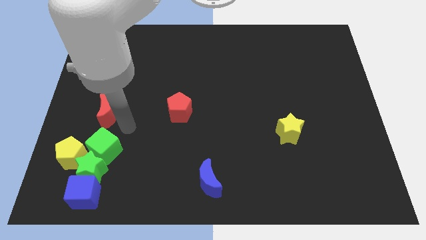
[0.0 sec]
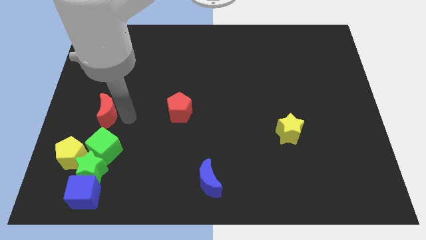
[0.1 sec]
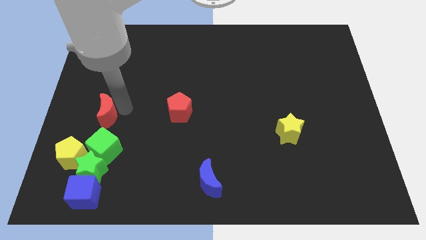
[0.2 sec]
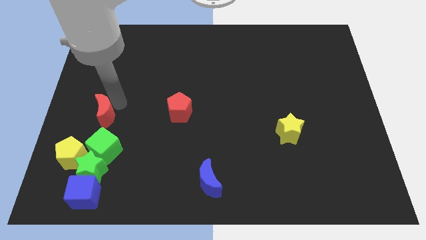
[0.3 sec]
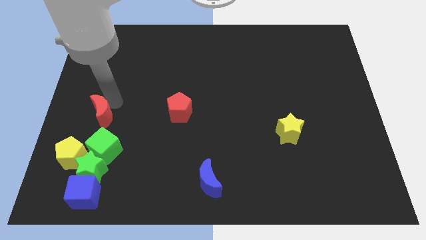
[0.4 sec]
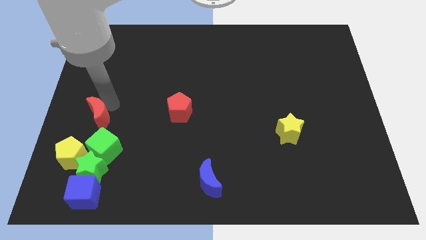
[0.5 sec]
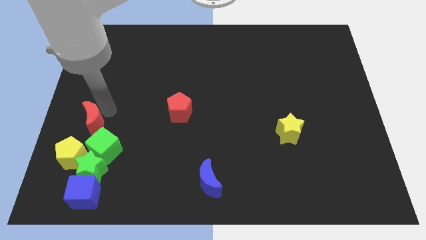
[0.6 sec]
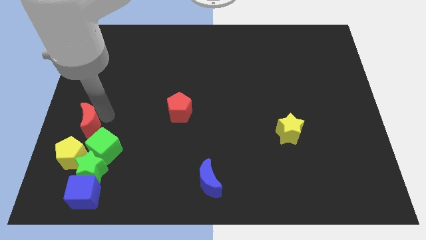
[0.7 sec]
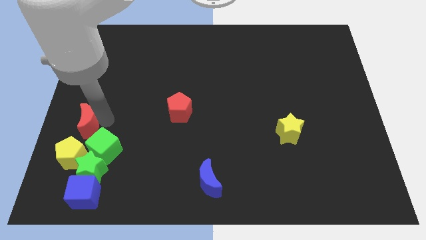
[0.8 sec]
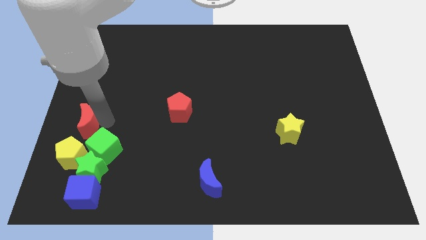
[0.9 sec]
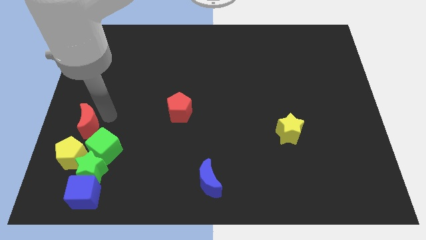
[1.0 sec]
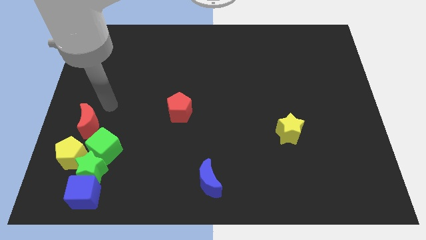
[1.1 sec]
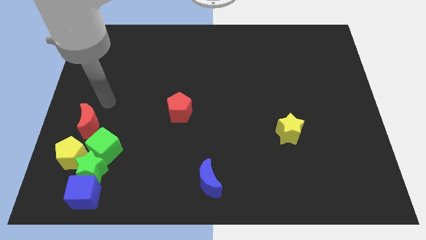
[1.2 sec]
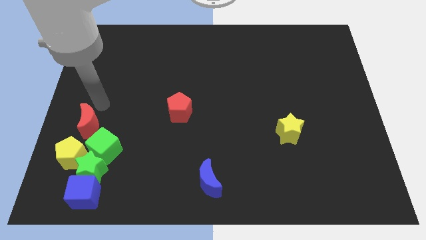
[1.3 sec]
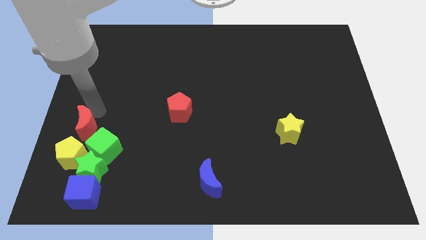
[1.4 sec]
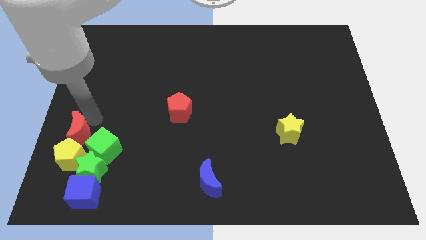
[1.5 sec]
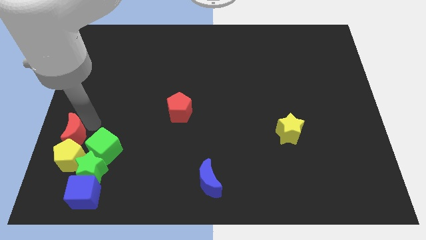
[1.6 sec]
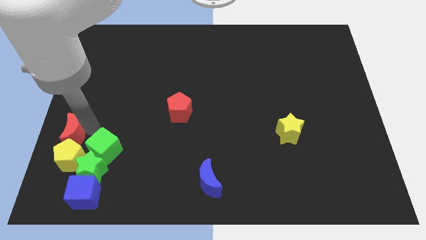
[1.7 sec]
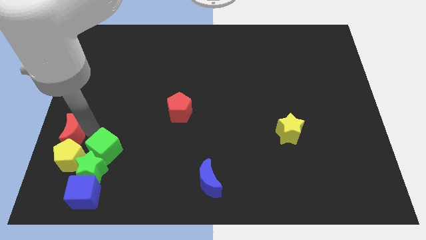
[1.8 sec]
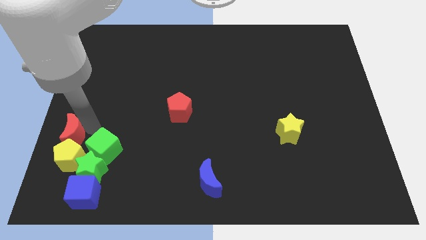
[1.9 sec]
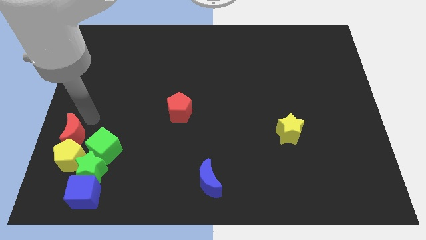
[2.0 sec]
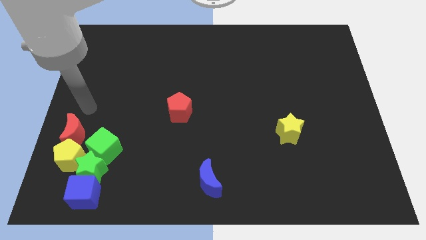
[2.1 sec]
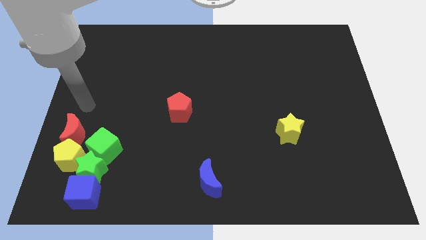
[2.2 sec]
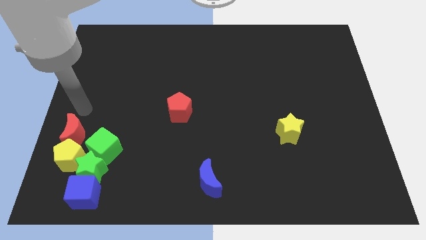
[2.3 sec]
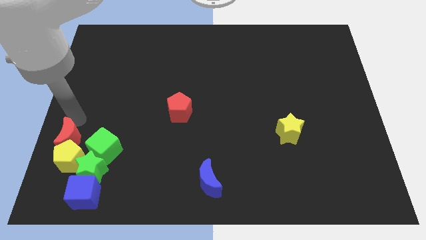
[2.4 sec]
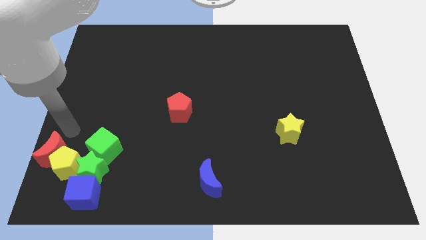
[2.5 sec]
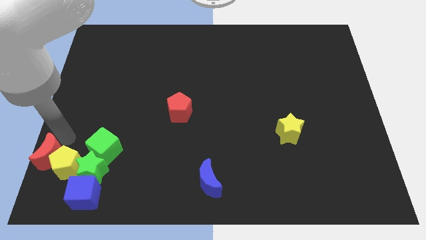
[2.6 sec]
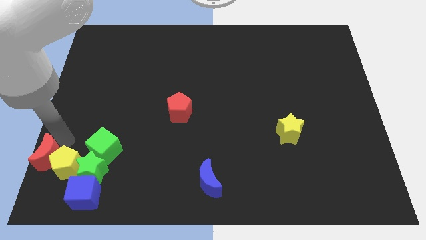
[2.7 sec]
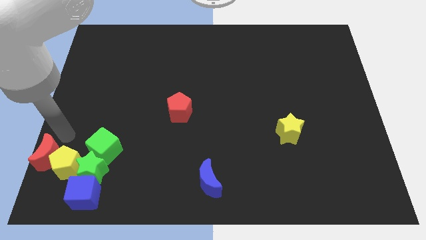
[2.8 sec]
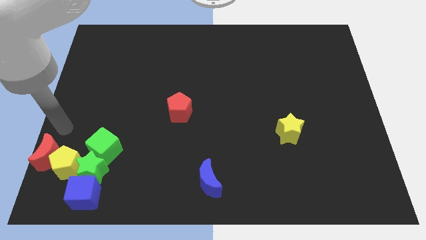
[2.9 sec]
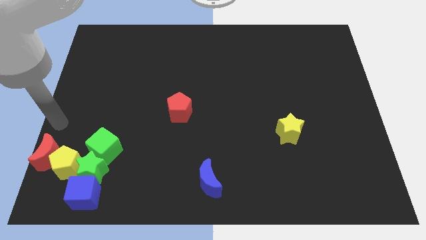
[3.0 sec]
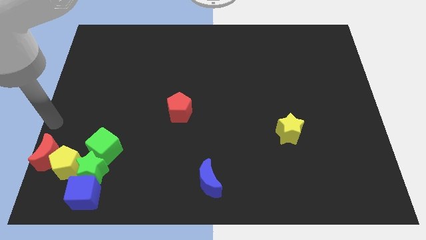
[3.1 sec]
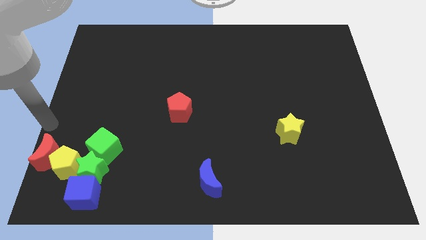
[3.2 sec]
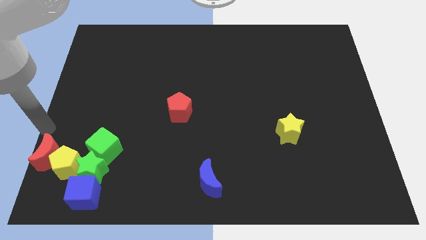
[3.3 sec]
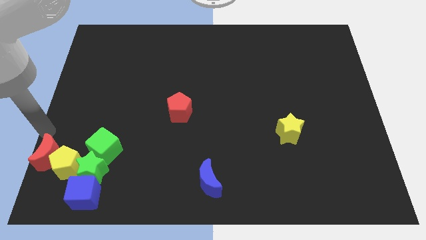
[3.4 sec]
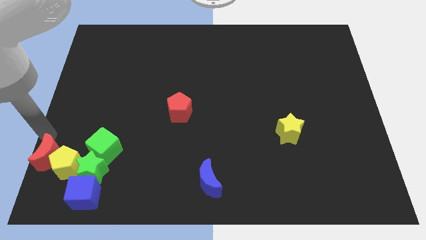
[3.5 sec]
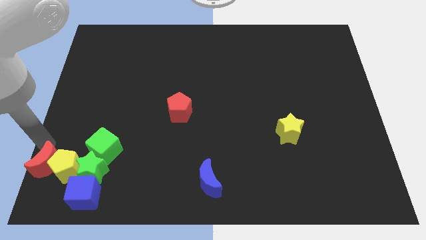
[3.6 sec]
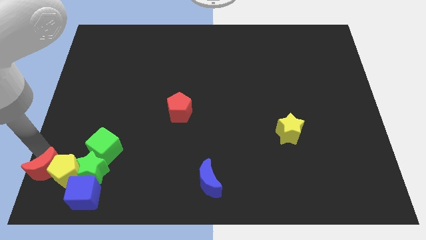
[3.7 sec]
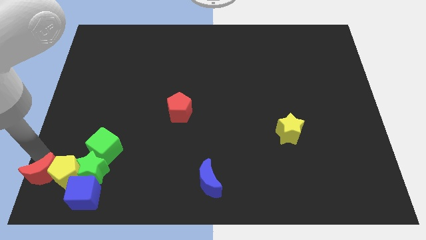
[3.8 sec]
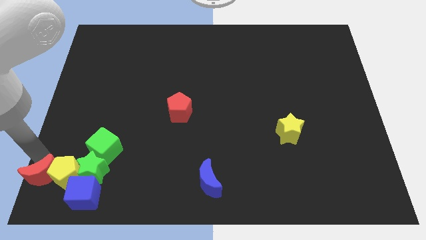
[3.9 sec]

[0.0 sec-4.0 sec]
move the red crescent to the left of the yellow pentagon

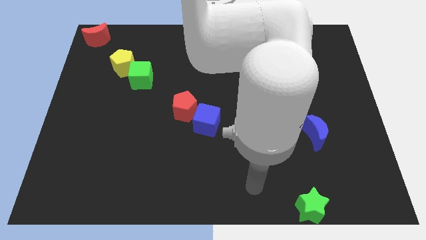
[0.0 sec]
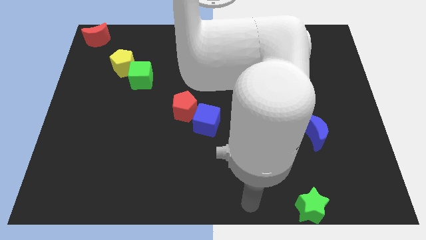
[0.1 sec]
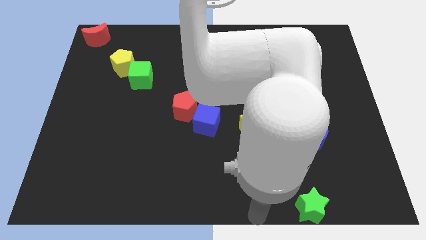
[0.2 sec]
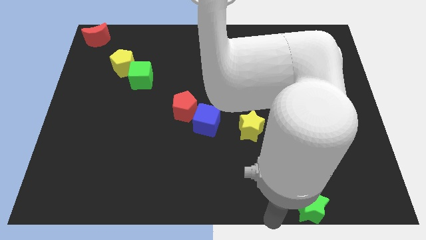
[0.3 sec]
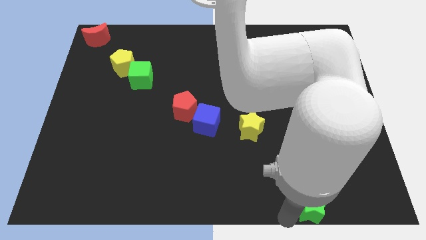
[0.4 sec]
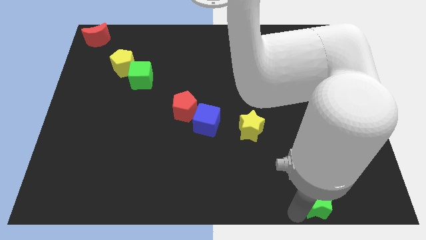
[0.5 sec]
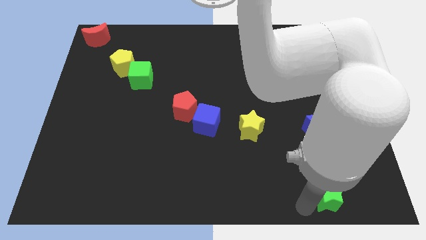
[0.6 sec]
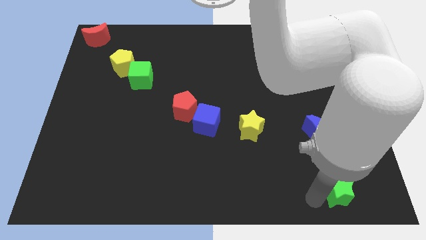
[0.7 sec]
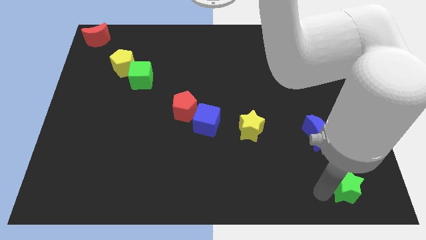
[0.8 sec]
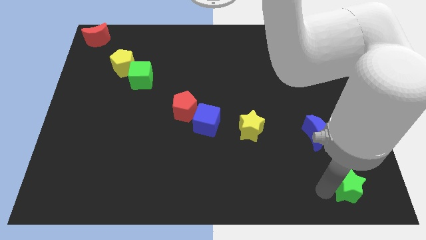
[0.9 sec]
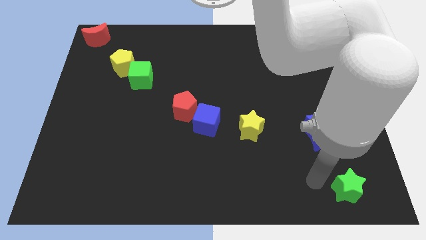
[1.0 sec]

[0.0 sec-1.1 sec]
push green star towards bottom right

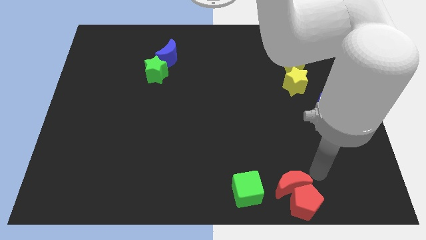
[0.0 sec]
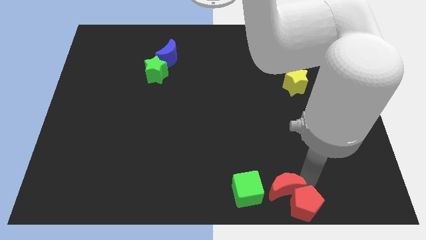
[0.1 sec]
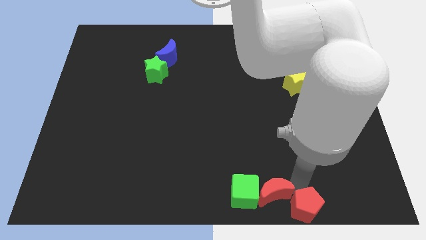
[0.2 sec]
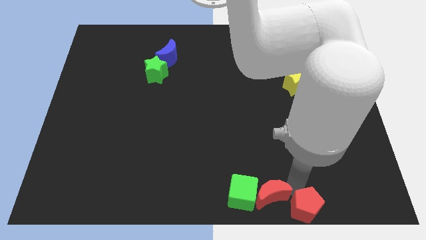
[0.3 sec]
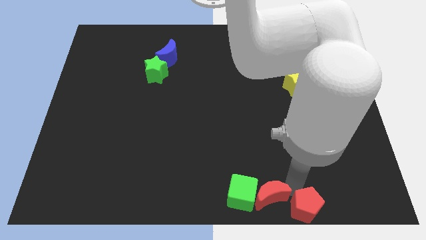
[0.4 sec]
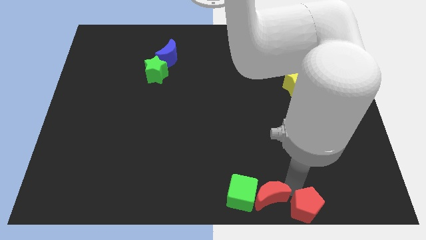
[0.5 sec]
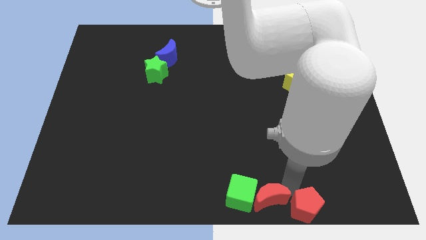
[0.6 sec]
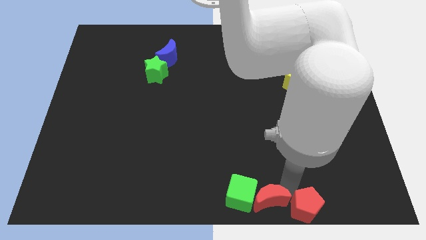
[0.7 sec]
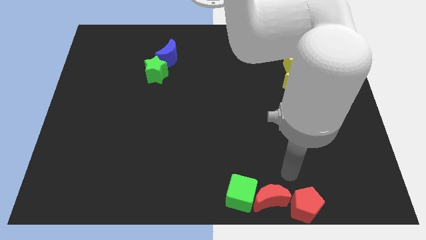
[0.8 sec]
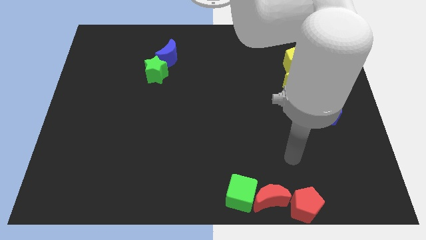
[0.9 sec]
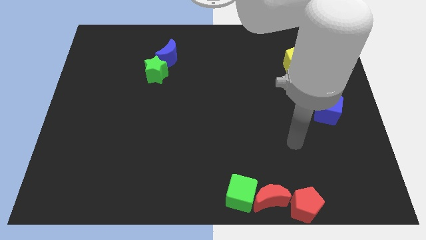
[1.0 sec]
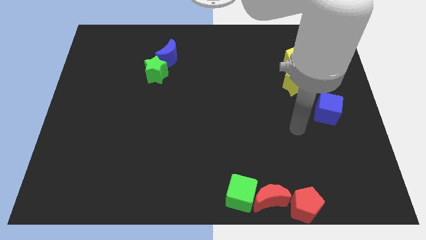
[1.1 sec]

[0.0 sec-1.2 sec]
place the red crescent in between the green cube and red pentagon

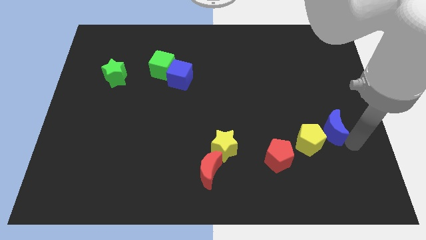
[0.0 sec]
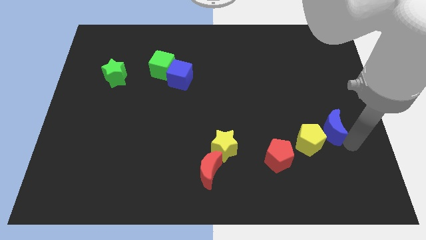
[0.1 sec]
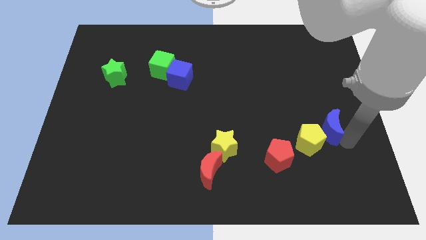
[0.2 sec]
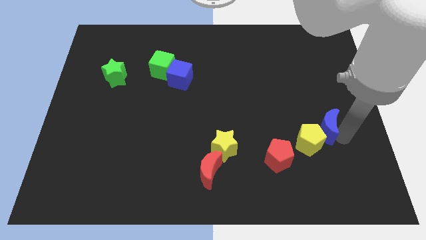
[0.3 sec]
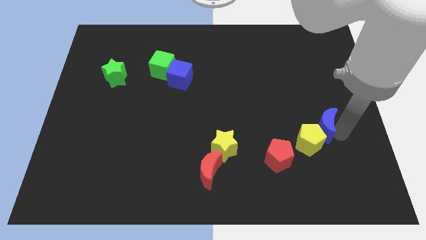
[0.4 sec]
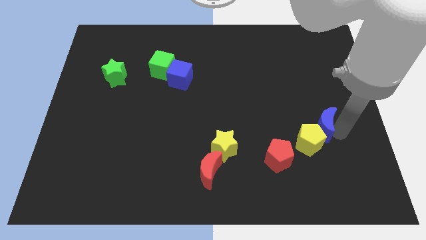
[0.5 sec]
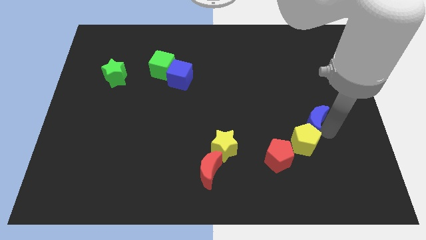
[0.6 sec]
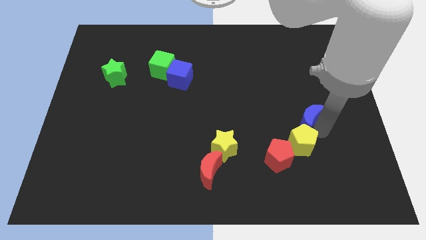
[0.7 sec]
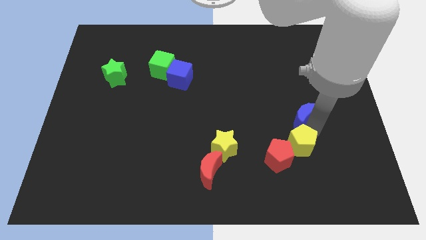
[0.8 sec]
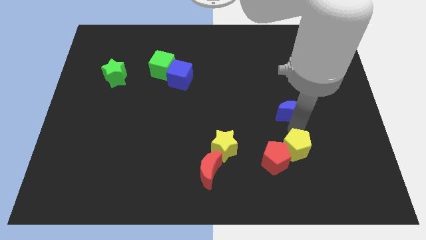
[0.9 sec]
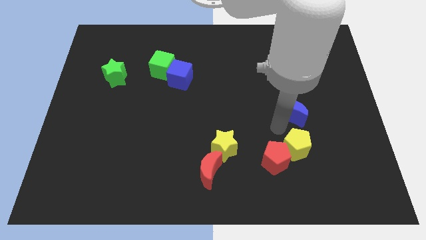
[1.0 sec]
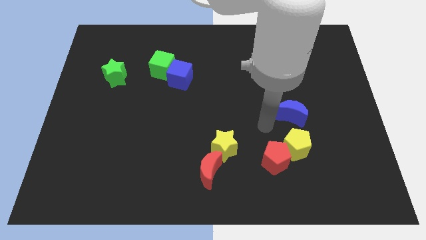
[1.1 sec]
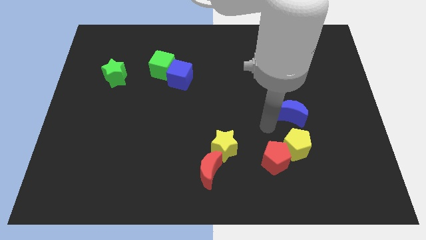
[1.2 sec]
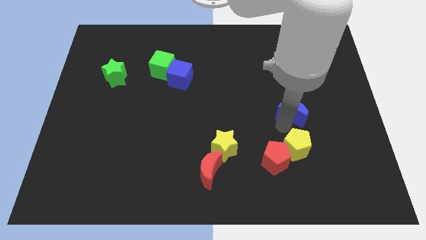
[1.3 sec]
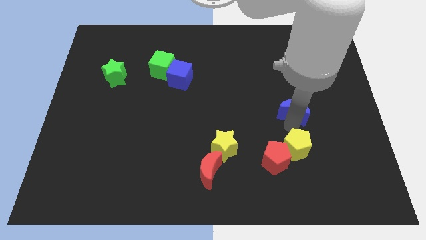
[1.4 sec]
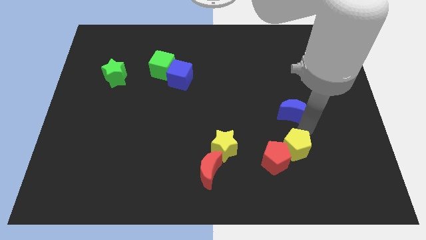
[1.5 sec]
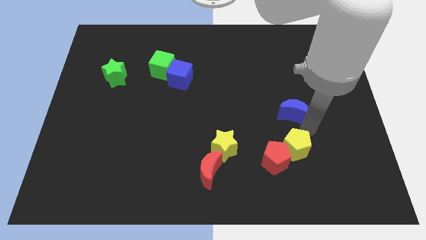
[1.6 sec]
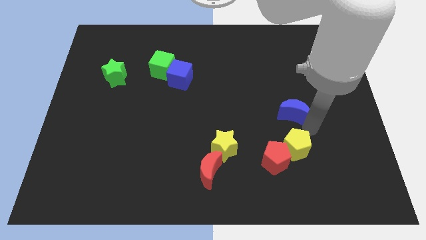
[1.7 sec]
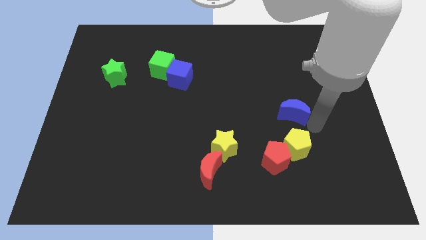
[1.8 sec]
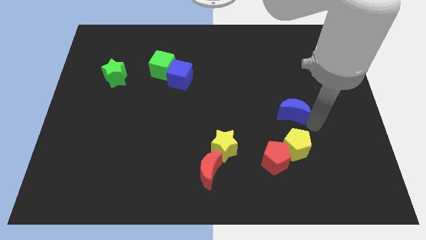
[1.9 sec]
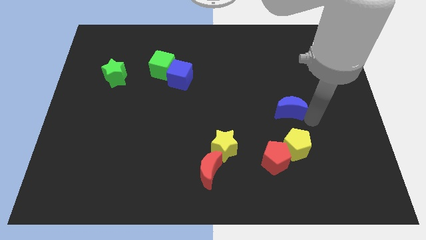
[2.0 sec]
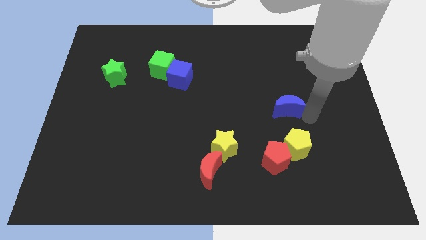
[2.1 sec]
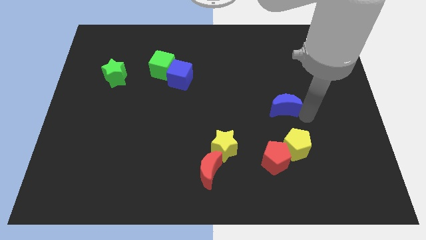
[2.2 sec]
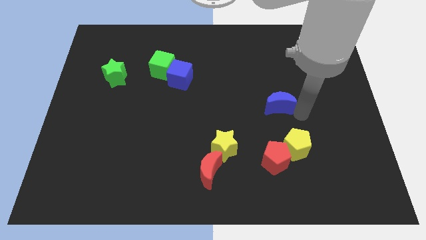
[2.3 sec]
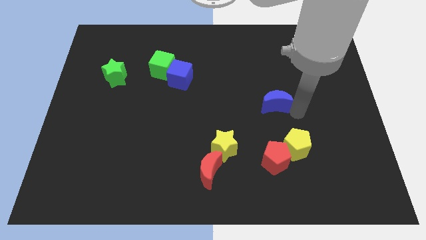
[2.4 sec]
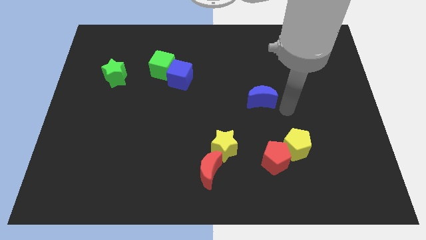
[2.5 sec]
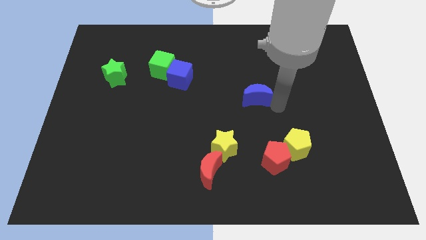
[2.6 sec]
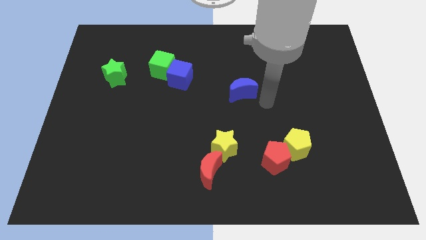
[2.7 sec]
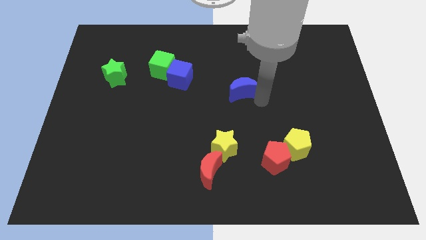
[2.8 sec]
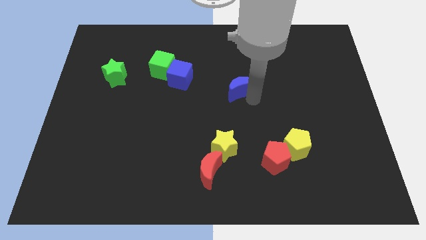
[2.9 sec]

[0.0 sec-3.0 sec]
push blue moon diagonally upwards
